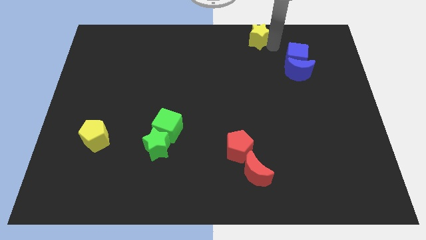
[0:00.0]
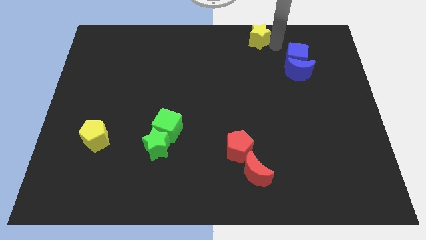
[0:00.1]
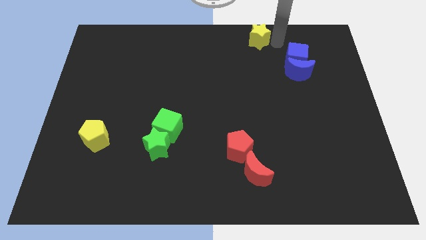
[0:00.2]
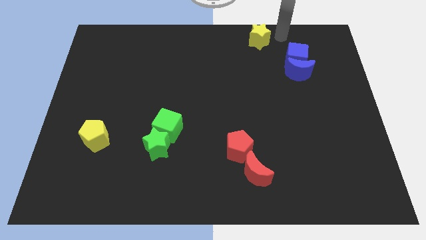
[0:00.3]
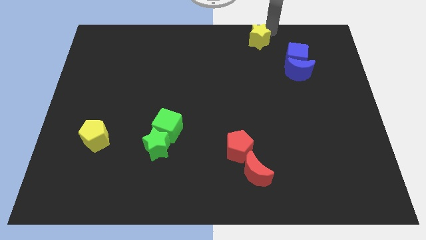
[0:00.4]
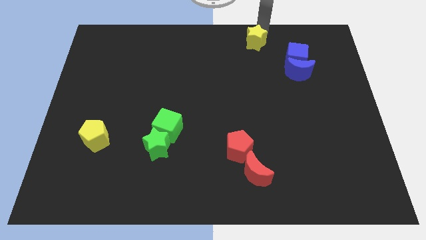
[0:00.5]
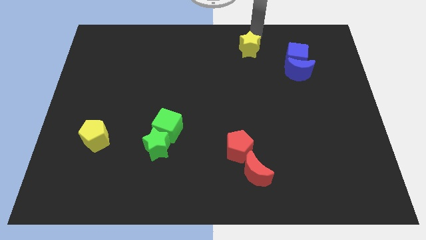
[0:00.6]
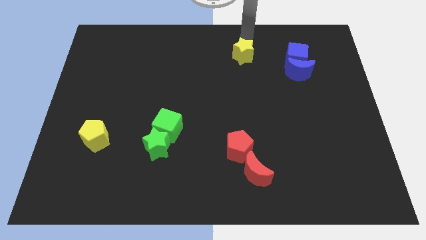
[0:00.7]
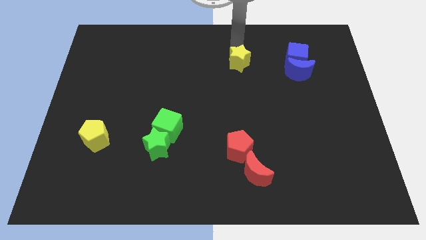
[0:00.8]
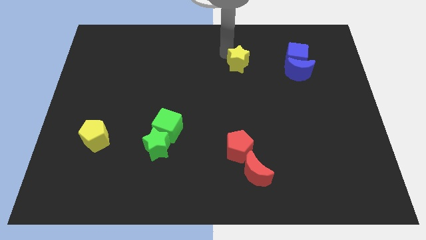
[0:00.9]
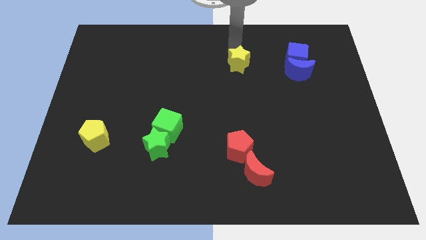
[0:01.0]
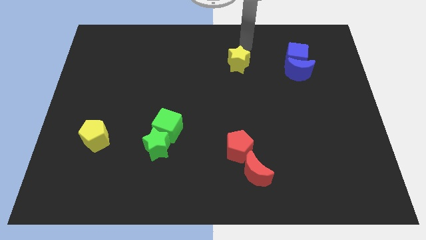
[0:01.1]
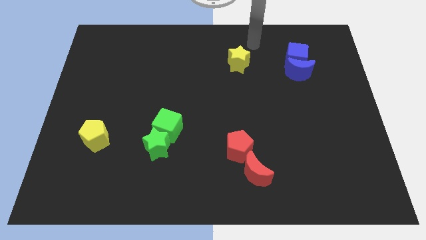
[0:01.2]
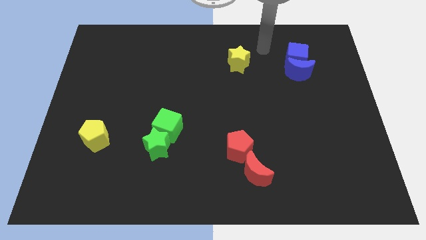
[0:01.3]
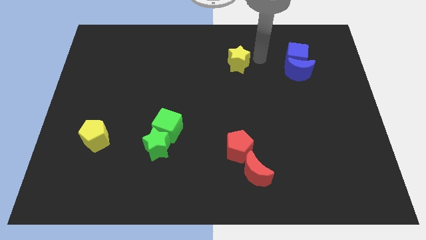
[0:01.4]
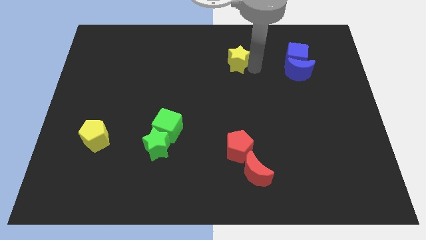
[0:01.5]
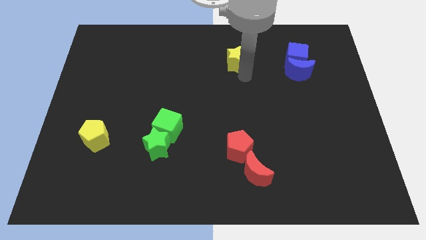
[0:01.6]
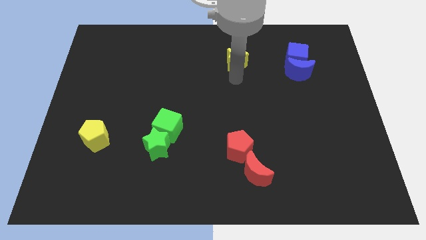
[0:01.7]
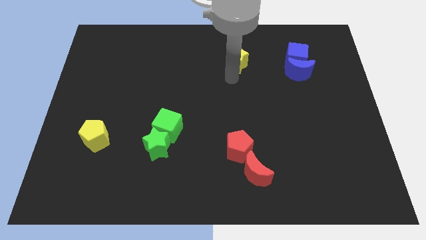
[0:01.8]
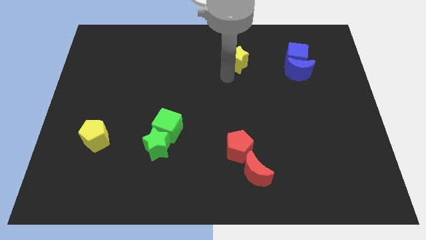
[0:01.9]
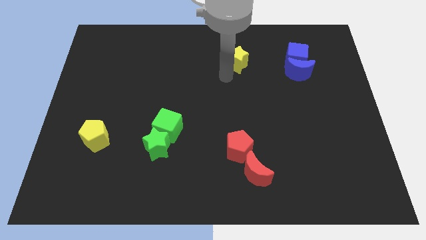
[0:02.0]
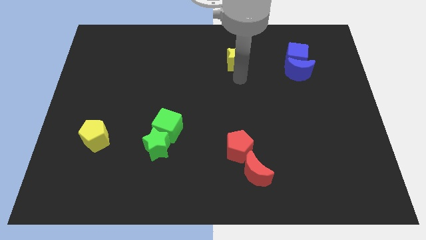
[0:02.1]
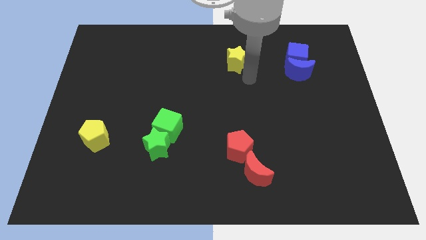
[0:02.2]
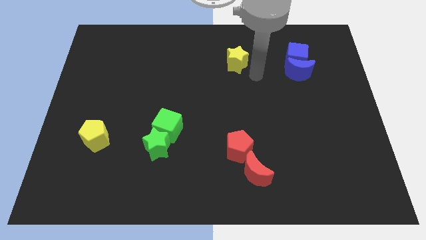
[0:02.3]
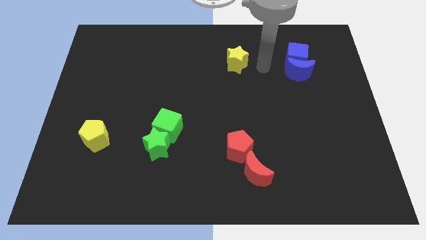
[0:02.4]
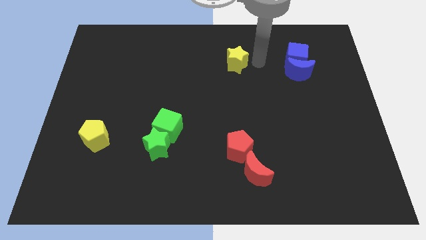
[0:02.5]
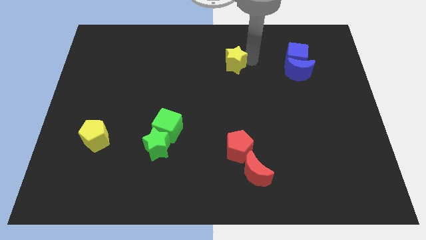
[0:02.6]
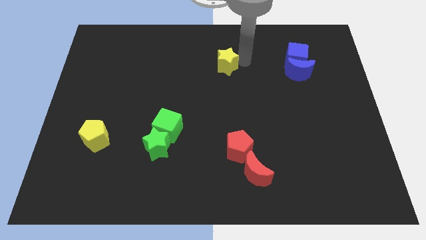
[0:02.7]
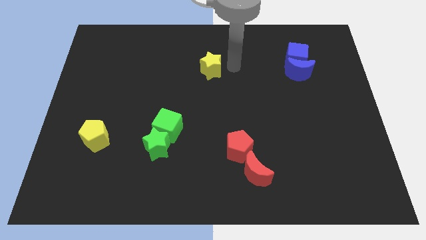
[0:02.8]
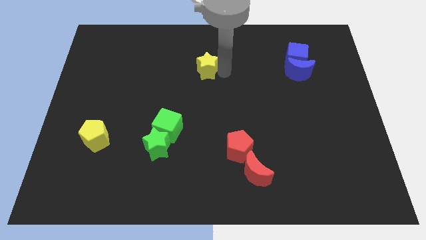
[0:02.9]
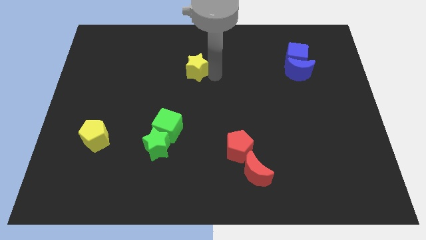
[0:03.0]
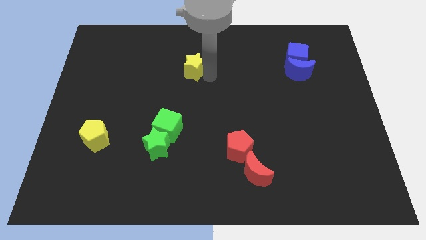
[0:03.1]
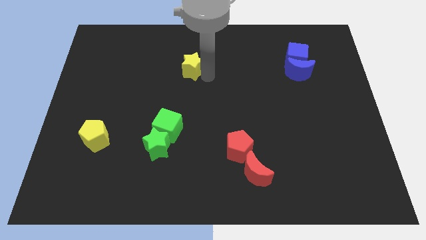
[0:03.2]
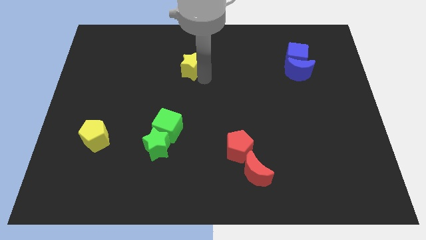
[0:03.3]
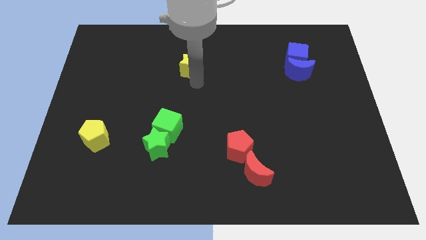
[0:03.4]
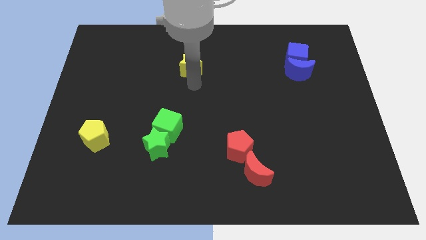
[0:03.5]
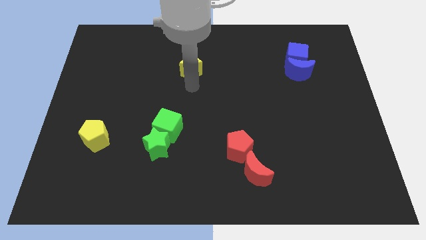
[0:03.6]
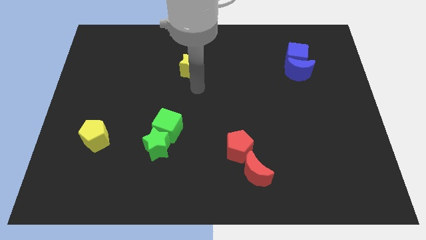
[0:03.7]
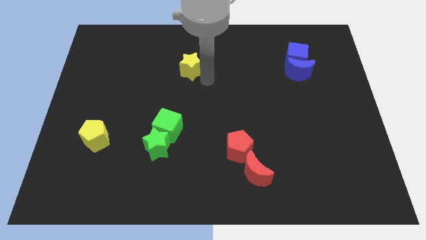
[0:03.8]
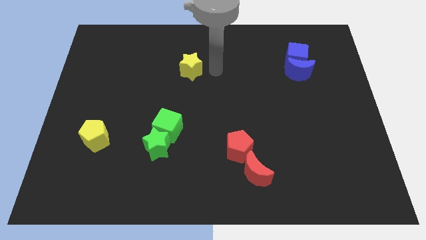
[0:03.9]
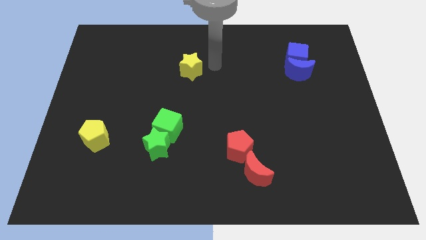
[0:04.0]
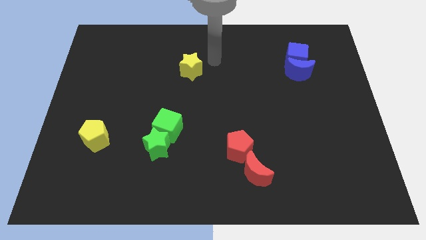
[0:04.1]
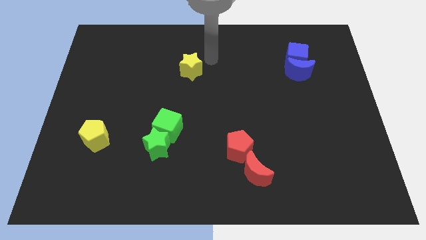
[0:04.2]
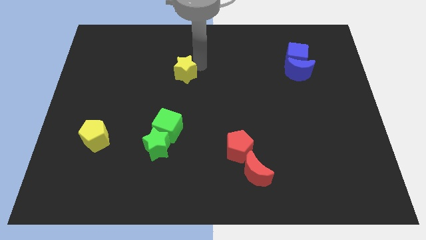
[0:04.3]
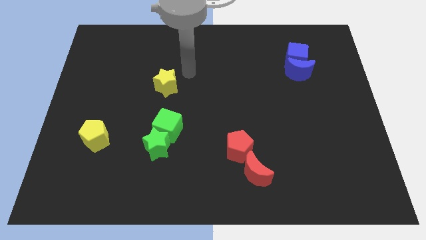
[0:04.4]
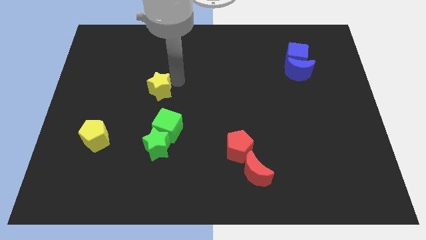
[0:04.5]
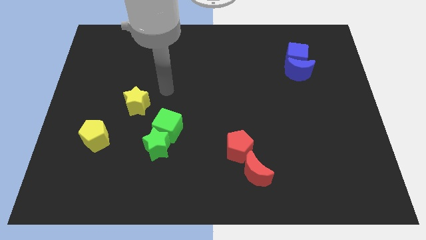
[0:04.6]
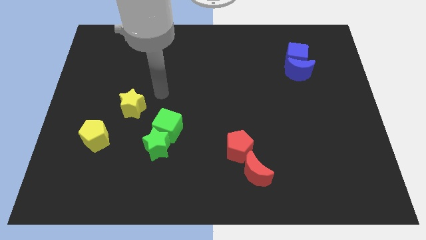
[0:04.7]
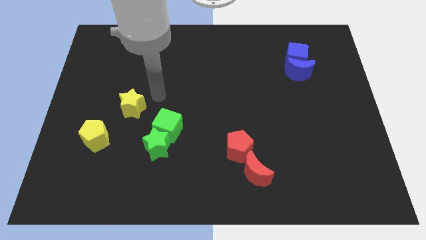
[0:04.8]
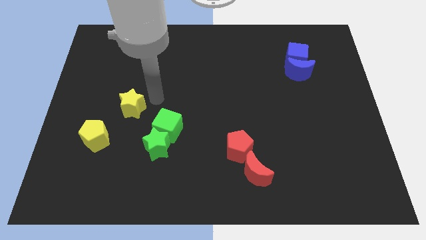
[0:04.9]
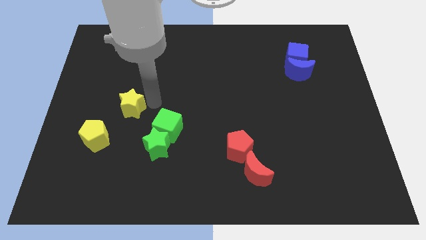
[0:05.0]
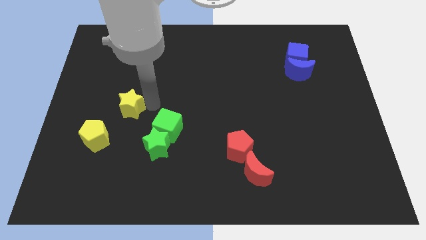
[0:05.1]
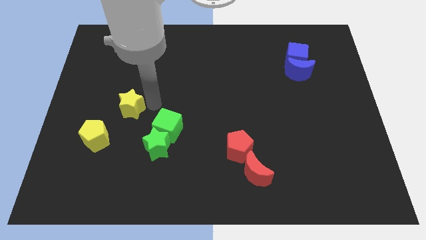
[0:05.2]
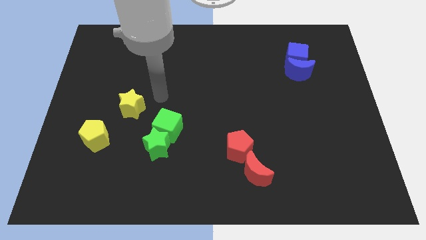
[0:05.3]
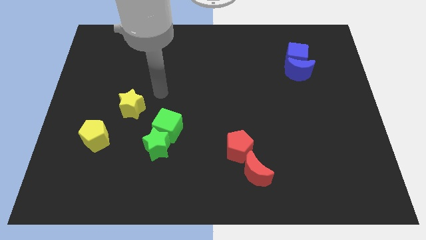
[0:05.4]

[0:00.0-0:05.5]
place the yellow star above the yellow pentagon

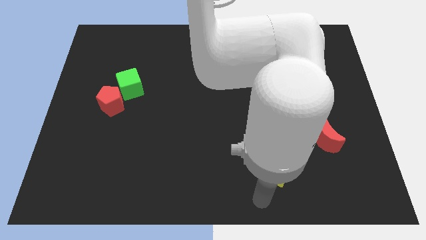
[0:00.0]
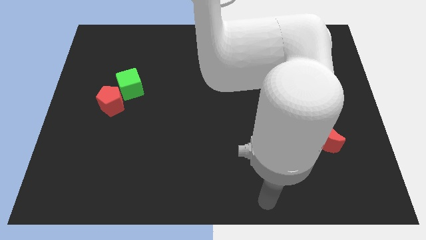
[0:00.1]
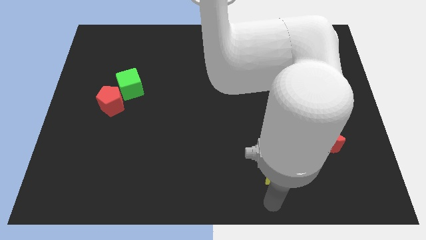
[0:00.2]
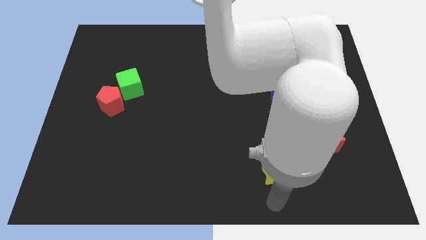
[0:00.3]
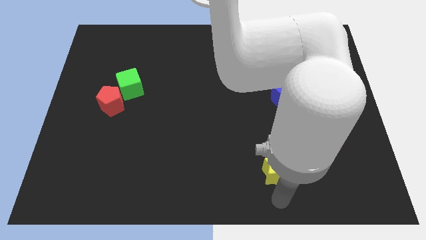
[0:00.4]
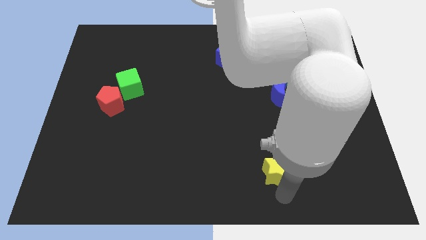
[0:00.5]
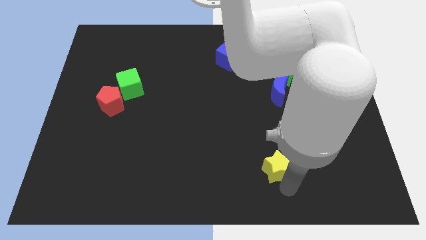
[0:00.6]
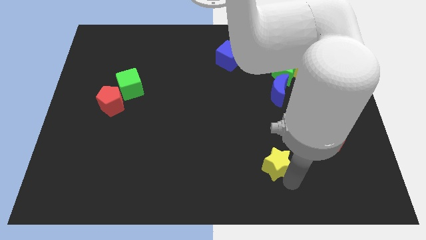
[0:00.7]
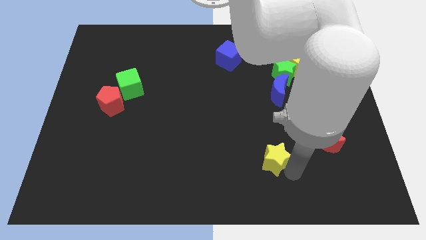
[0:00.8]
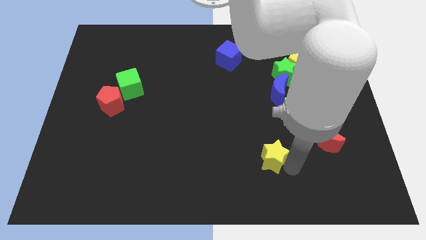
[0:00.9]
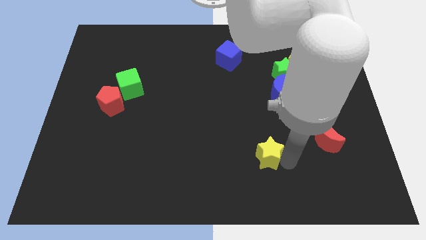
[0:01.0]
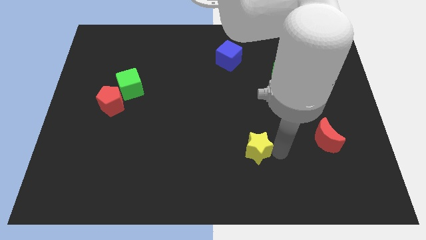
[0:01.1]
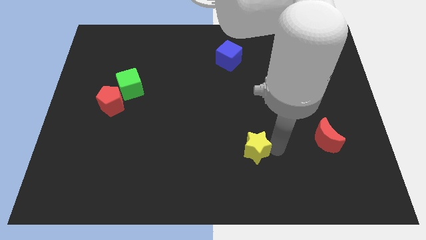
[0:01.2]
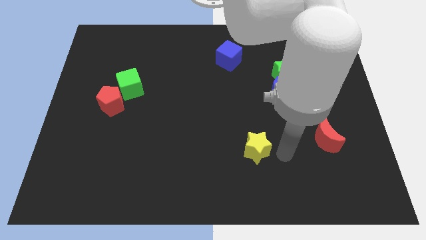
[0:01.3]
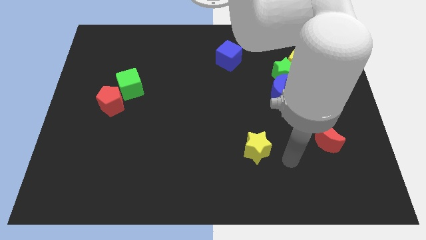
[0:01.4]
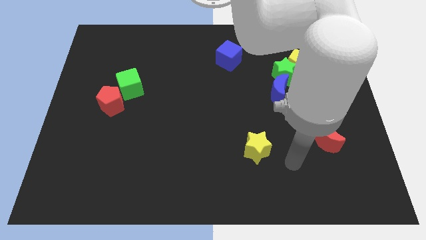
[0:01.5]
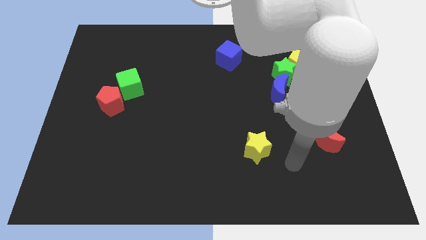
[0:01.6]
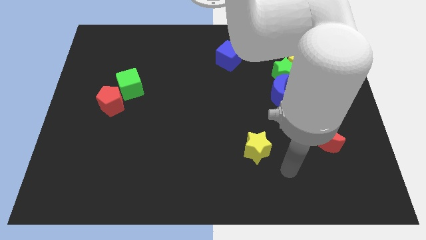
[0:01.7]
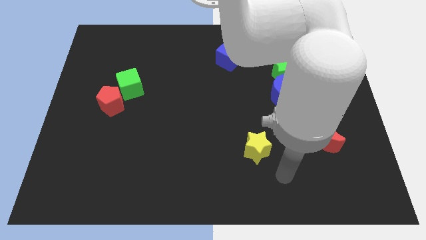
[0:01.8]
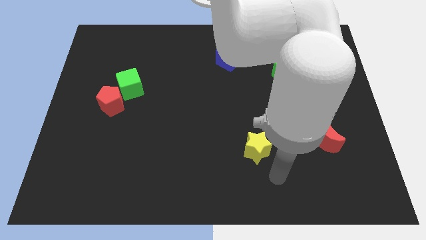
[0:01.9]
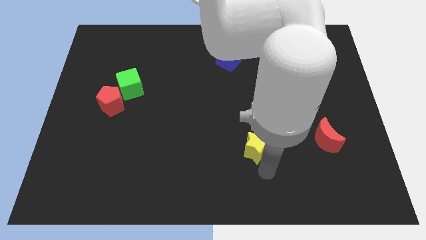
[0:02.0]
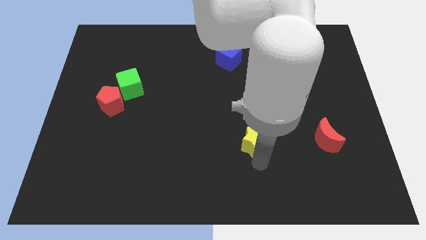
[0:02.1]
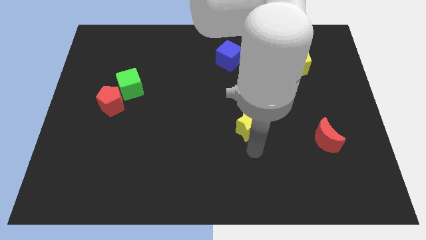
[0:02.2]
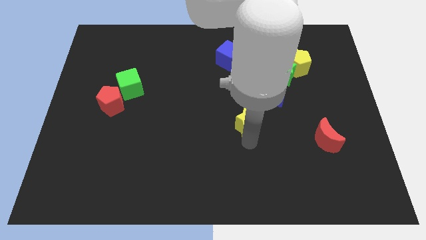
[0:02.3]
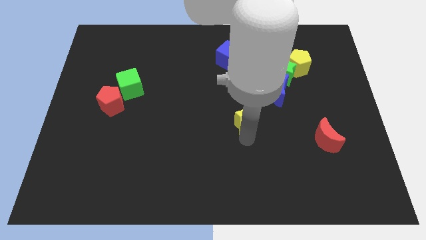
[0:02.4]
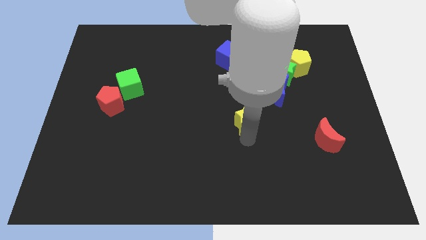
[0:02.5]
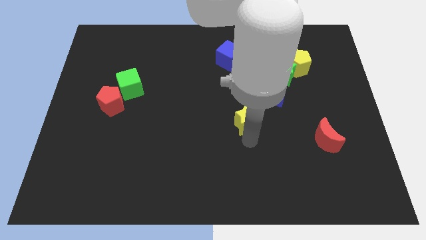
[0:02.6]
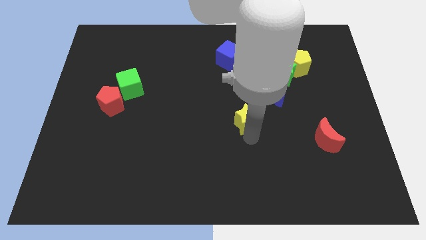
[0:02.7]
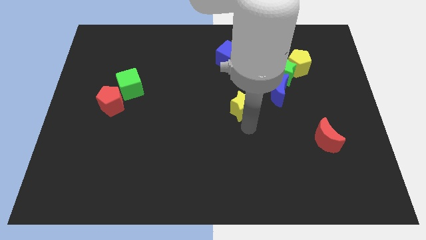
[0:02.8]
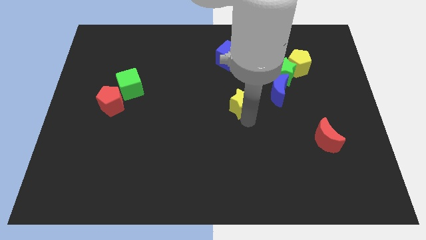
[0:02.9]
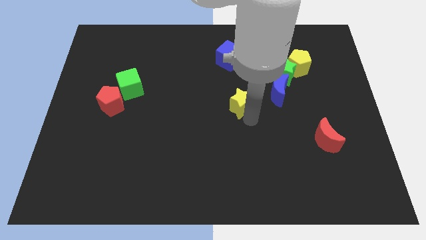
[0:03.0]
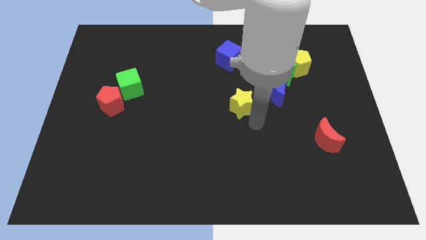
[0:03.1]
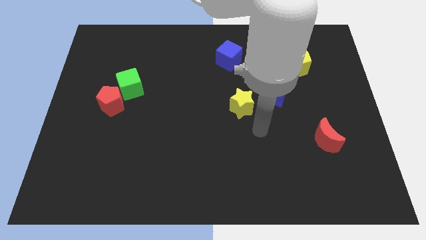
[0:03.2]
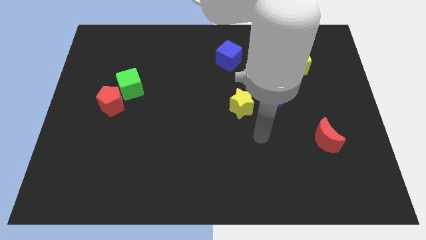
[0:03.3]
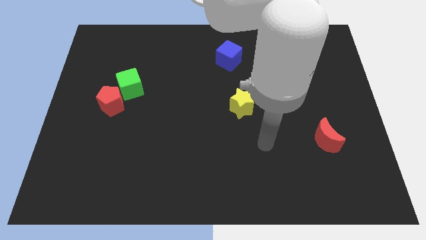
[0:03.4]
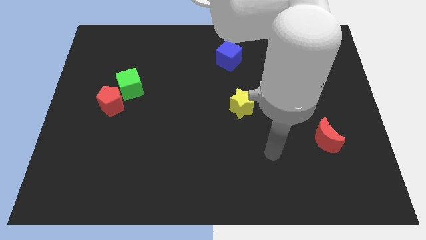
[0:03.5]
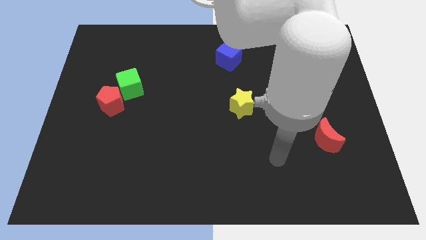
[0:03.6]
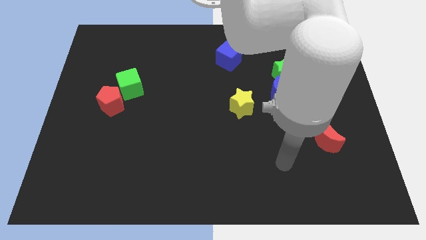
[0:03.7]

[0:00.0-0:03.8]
move the yellow star vertically to the left below the blue cube
